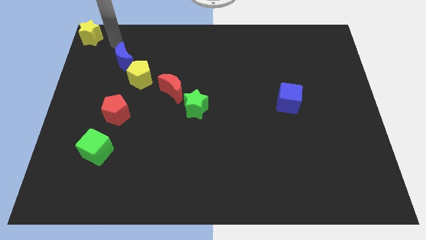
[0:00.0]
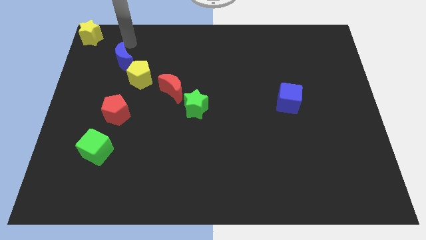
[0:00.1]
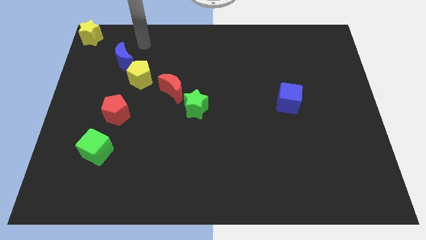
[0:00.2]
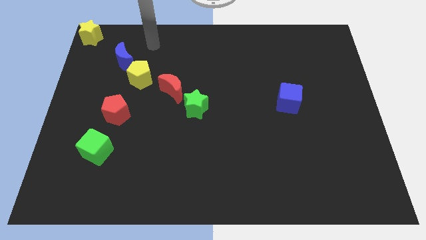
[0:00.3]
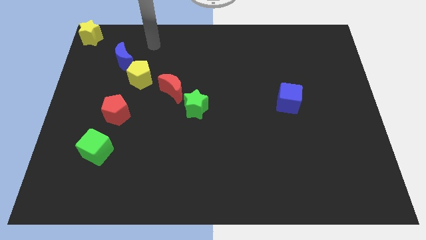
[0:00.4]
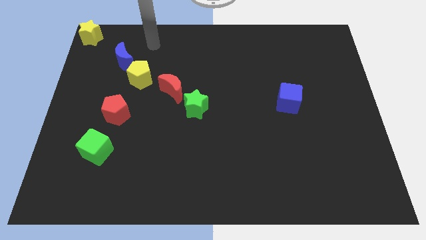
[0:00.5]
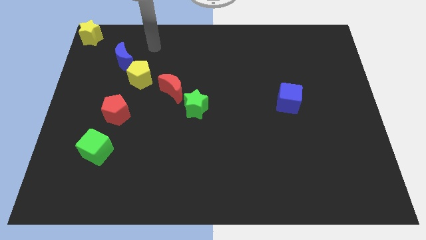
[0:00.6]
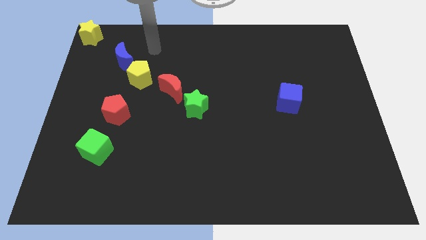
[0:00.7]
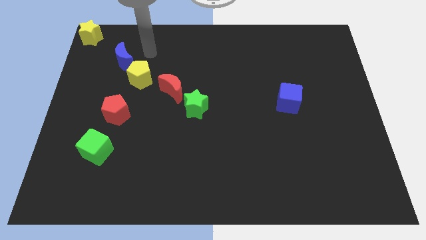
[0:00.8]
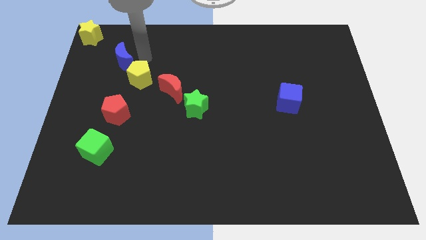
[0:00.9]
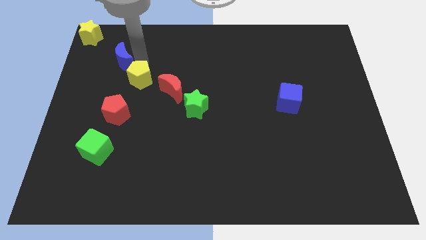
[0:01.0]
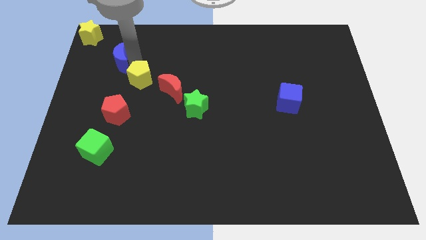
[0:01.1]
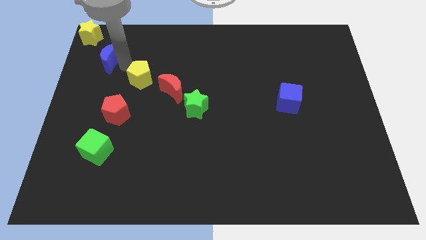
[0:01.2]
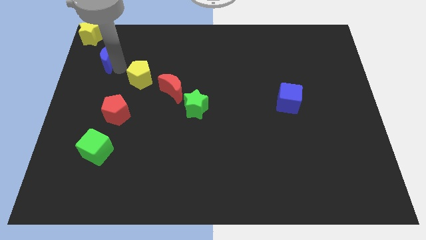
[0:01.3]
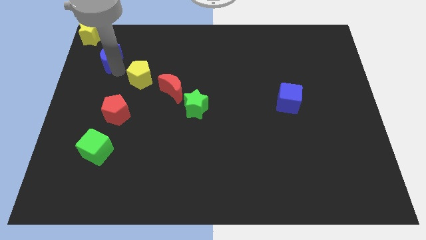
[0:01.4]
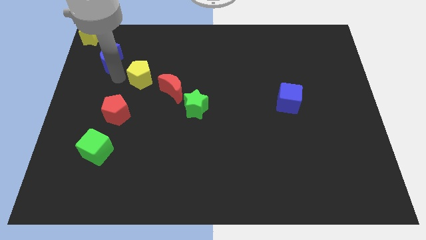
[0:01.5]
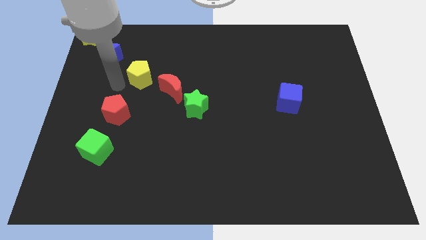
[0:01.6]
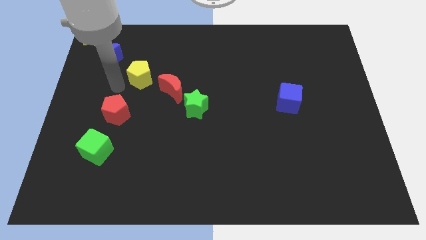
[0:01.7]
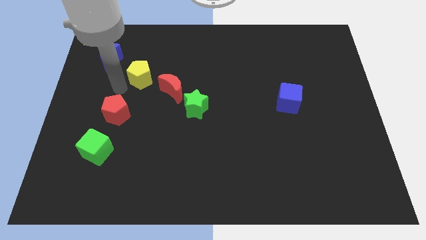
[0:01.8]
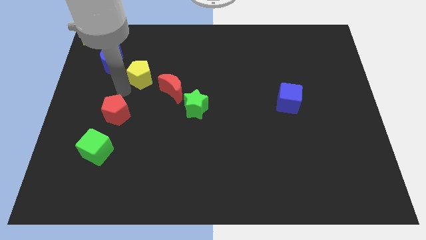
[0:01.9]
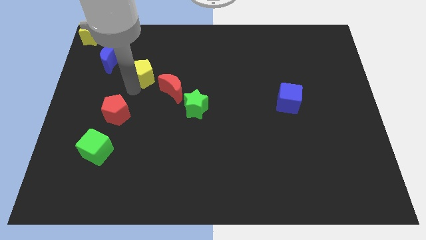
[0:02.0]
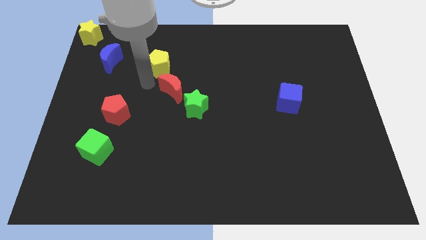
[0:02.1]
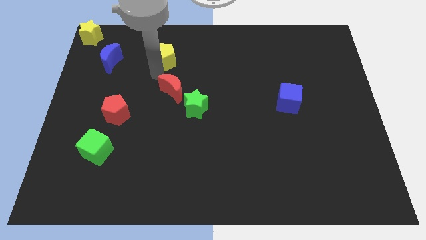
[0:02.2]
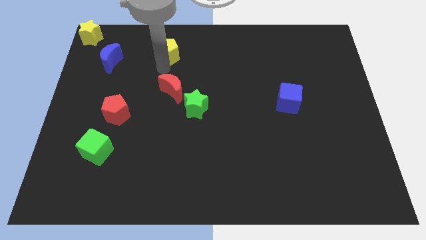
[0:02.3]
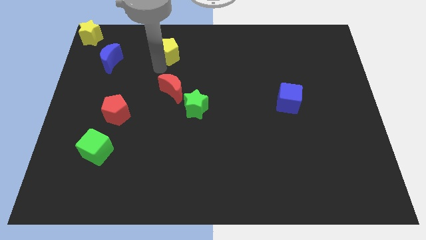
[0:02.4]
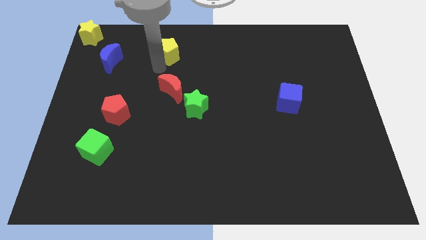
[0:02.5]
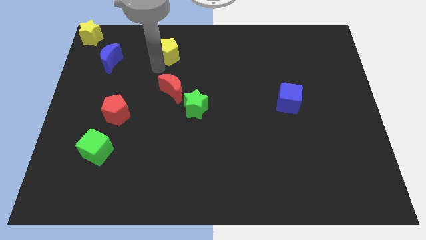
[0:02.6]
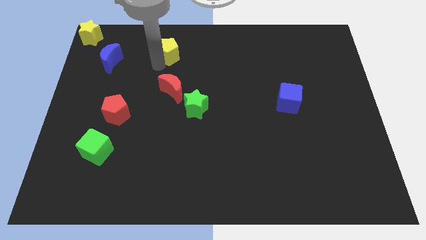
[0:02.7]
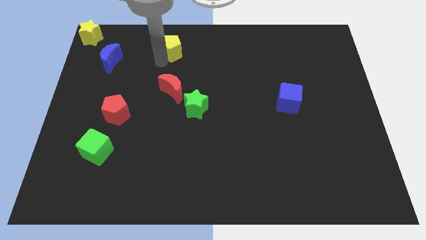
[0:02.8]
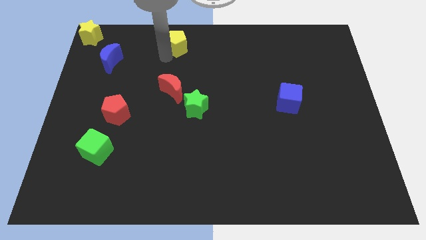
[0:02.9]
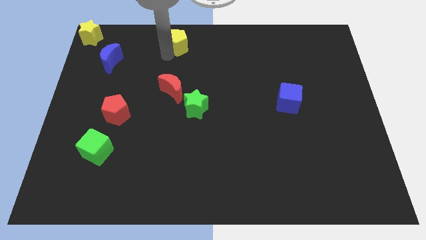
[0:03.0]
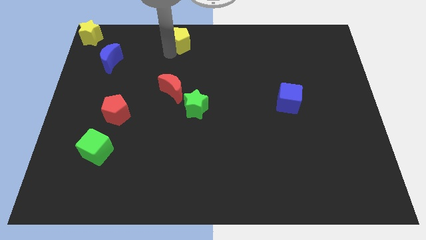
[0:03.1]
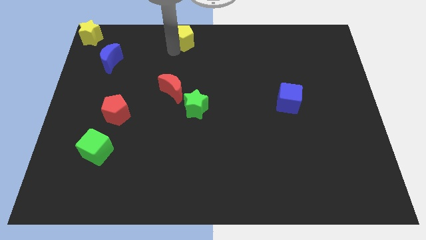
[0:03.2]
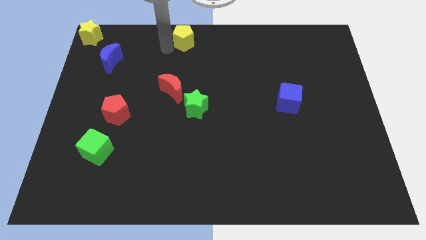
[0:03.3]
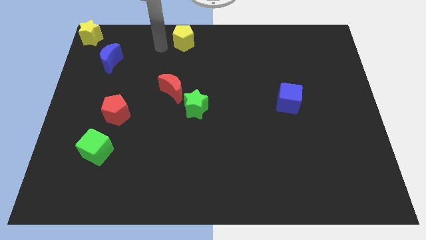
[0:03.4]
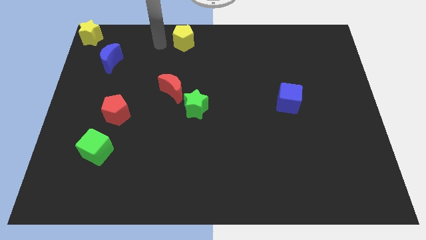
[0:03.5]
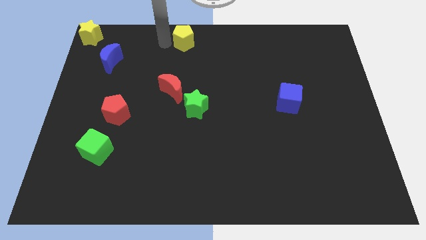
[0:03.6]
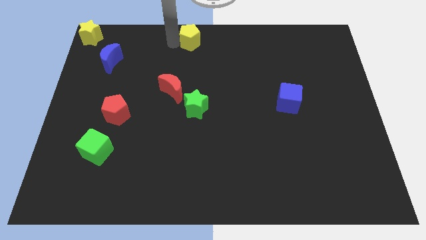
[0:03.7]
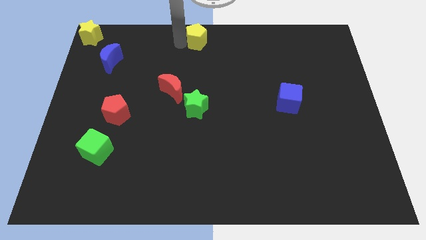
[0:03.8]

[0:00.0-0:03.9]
place the yellow pentagon diagonally top right to the blue cube

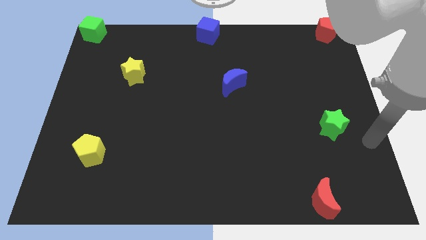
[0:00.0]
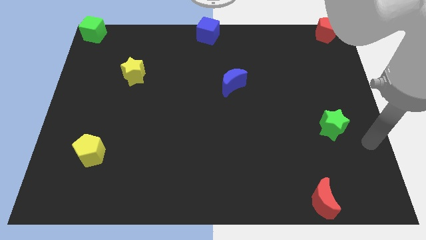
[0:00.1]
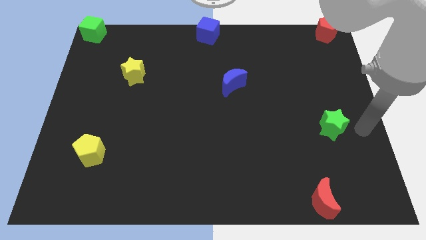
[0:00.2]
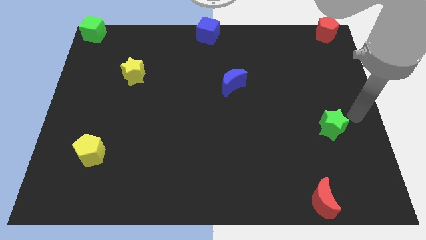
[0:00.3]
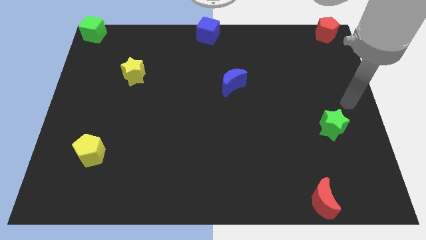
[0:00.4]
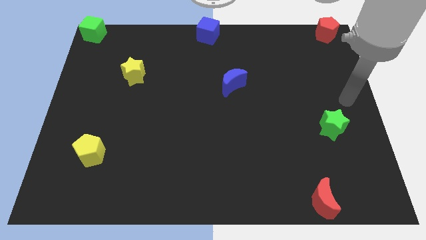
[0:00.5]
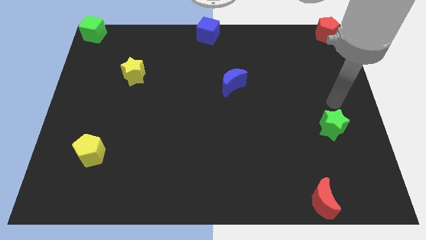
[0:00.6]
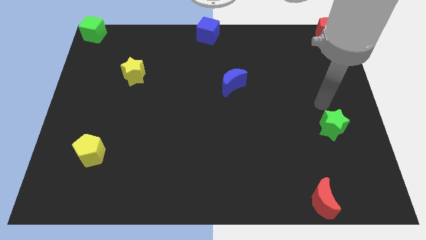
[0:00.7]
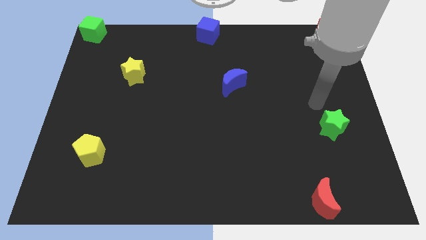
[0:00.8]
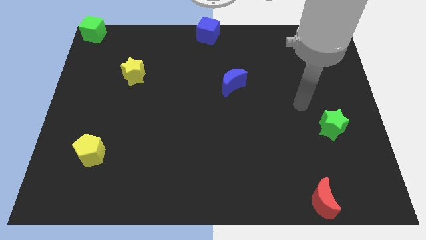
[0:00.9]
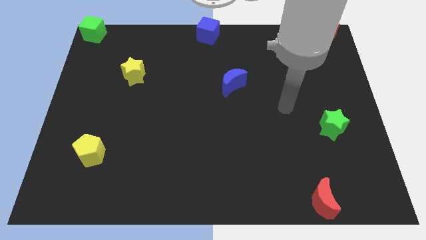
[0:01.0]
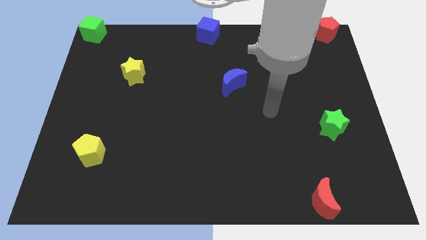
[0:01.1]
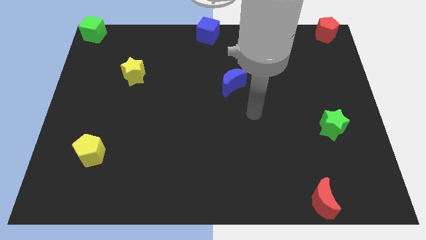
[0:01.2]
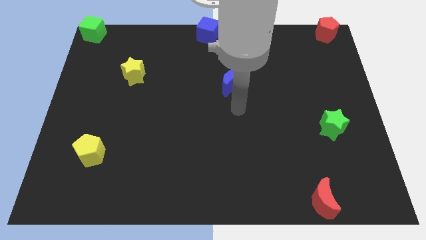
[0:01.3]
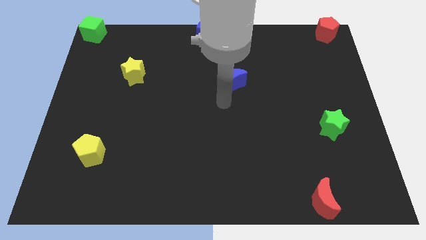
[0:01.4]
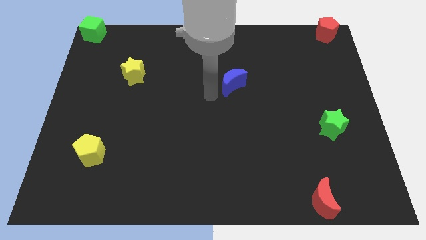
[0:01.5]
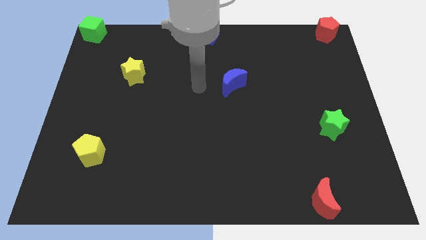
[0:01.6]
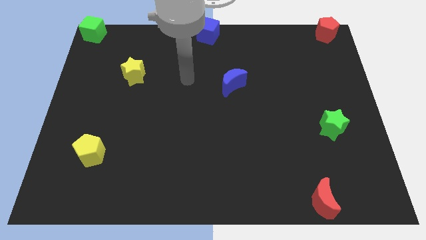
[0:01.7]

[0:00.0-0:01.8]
move your arm in between the yellow star and blue cube

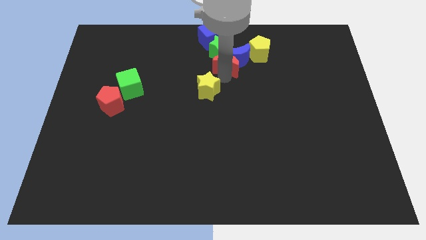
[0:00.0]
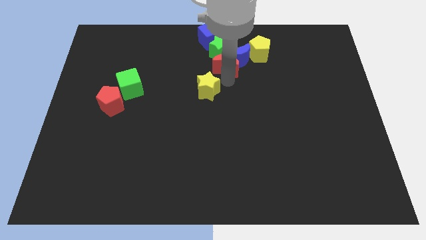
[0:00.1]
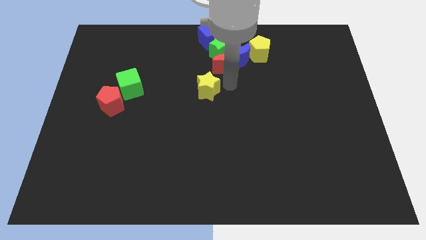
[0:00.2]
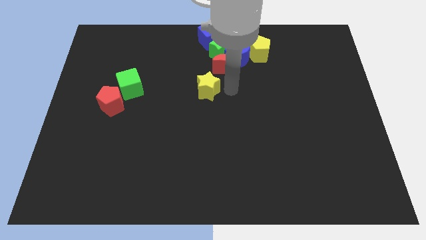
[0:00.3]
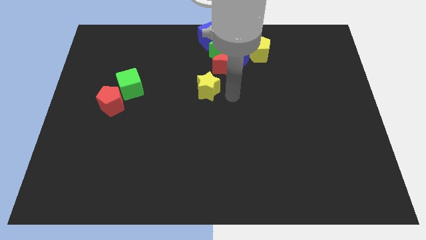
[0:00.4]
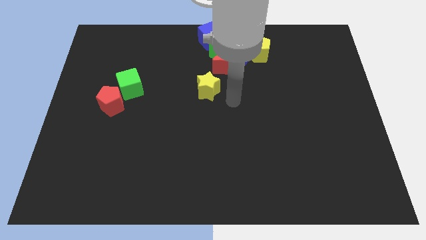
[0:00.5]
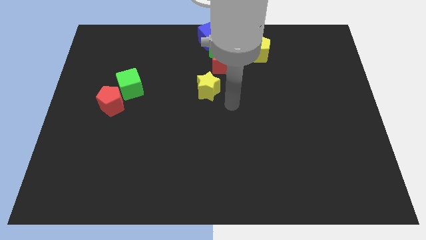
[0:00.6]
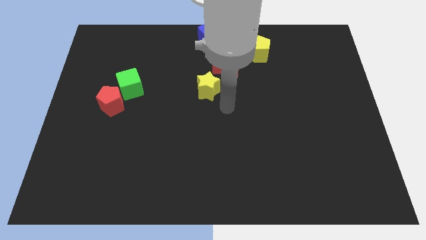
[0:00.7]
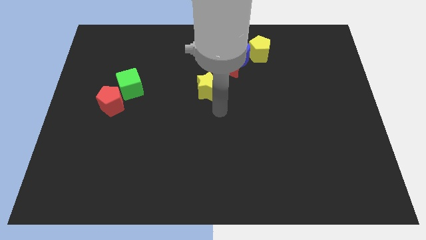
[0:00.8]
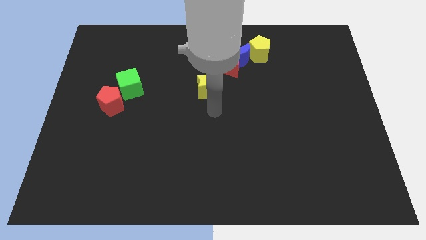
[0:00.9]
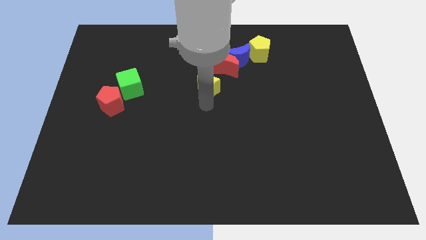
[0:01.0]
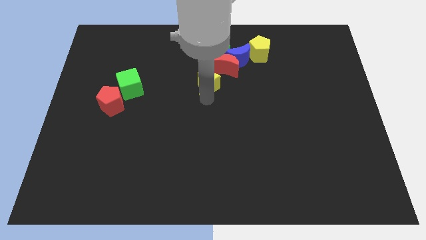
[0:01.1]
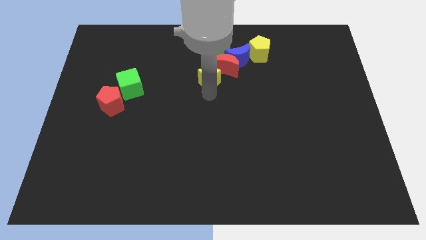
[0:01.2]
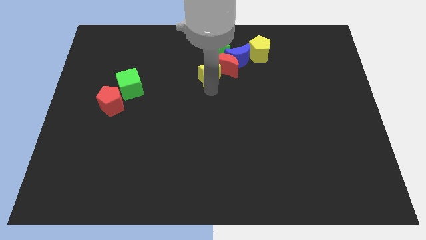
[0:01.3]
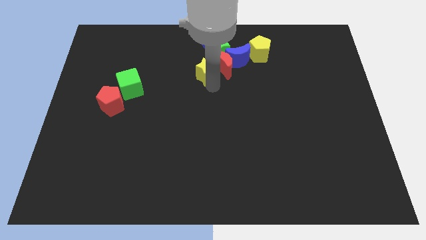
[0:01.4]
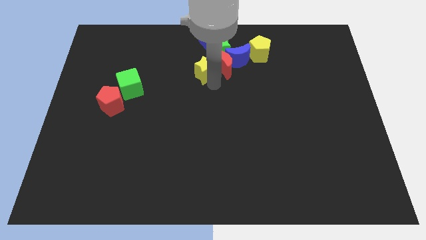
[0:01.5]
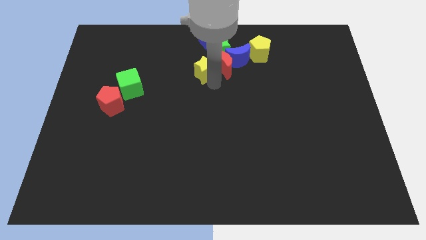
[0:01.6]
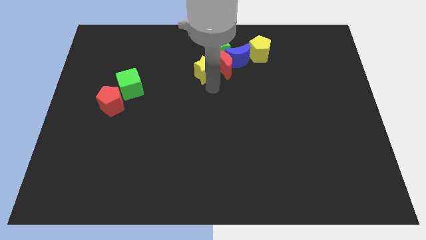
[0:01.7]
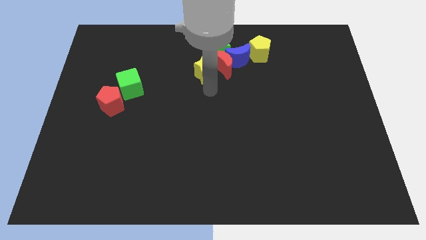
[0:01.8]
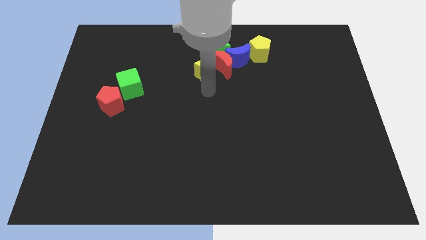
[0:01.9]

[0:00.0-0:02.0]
push the yellow star into the red moon

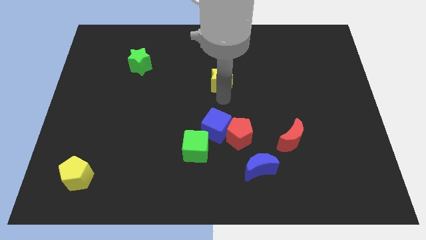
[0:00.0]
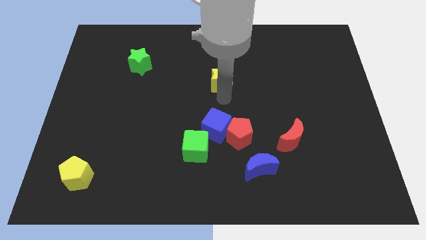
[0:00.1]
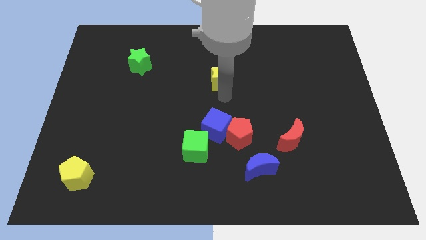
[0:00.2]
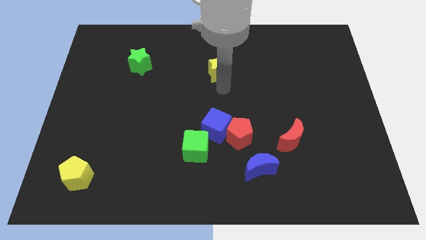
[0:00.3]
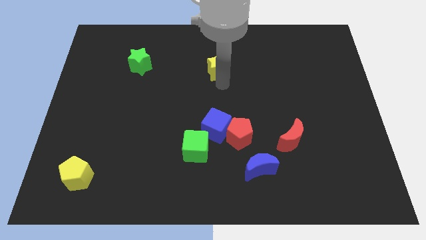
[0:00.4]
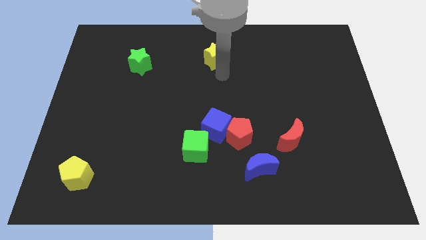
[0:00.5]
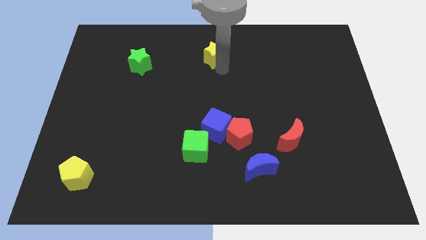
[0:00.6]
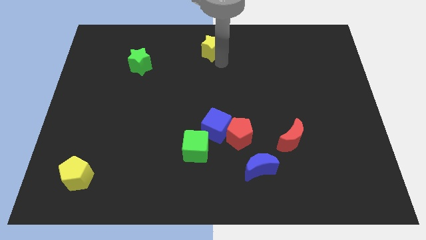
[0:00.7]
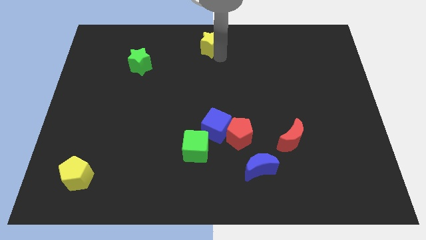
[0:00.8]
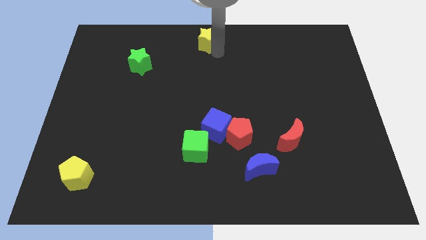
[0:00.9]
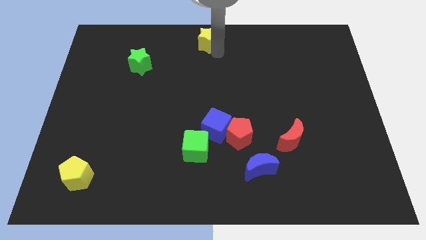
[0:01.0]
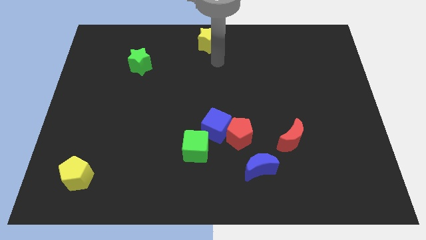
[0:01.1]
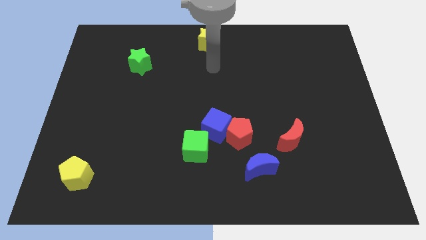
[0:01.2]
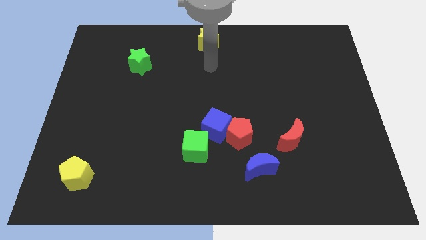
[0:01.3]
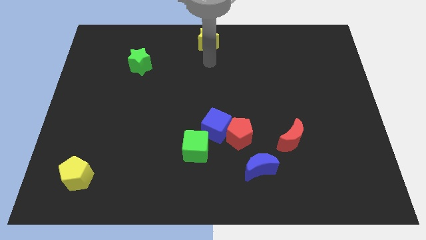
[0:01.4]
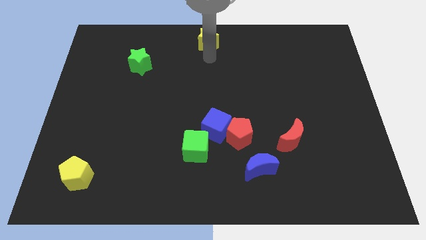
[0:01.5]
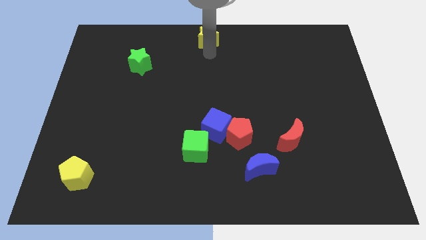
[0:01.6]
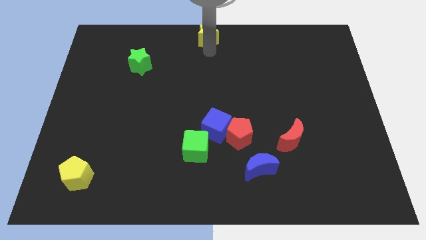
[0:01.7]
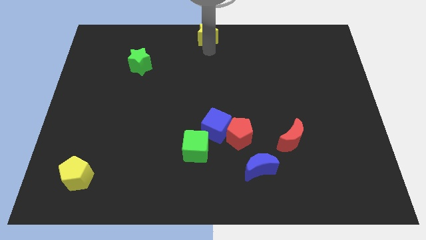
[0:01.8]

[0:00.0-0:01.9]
push the yellow star to the top center of the board
